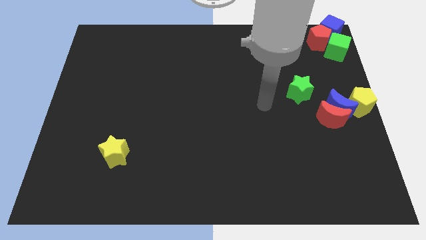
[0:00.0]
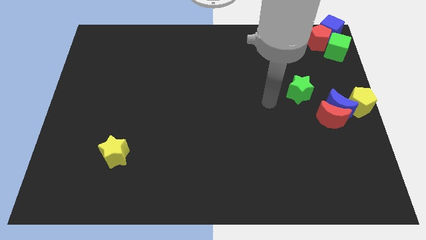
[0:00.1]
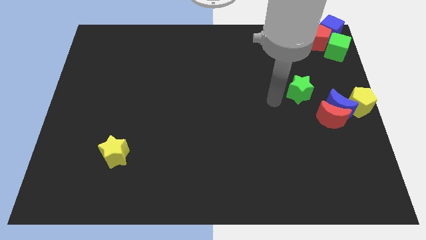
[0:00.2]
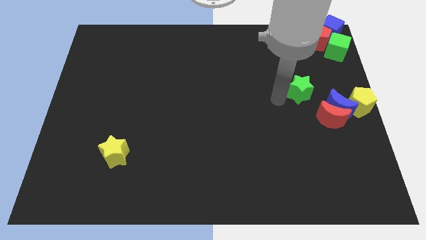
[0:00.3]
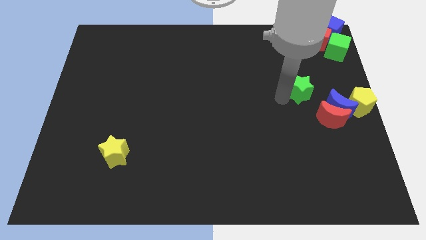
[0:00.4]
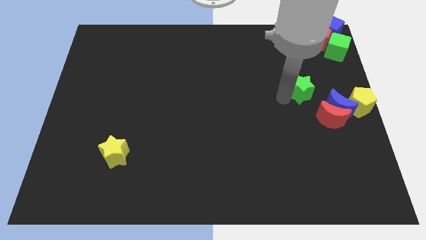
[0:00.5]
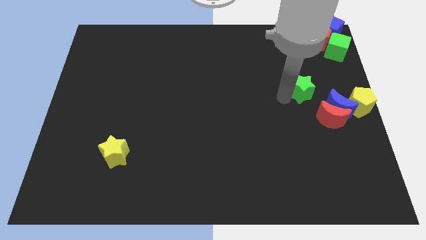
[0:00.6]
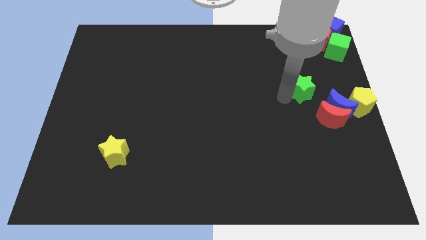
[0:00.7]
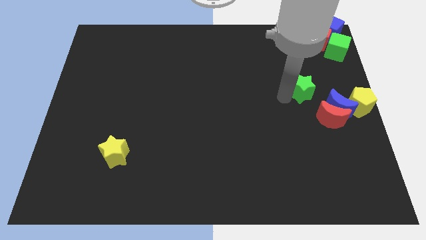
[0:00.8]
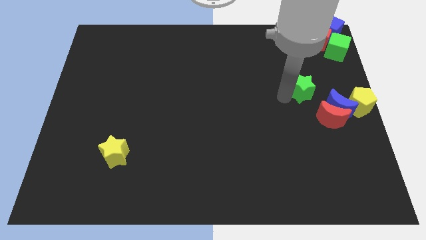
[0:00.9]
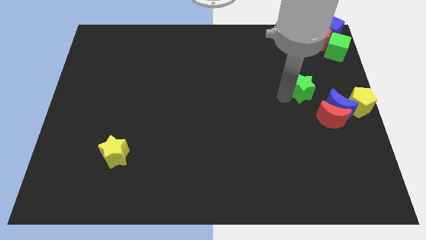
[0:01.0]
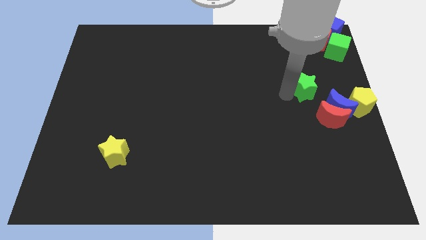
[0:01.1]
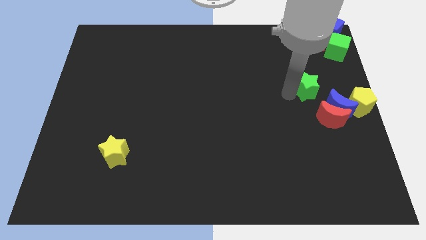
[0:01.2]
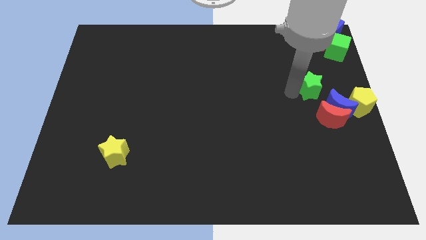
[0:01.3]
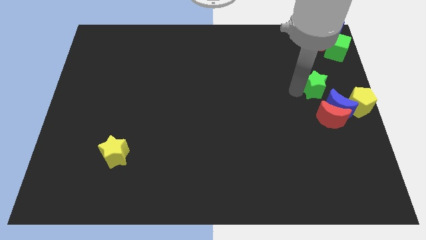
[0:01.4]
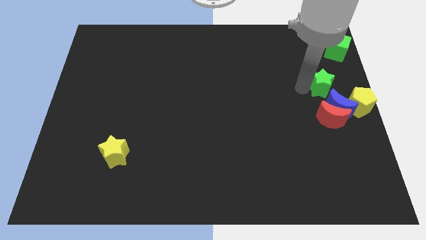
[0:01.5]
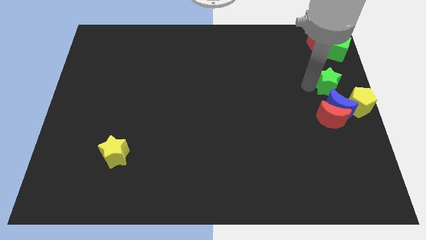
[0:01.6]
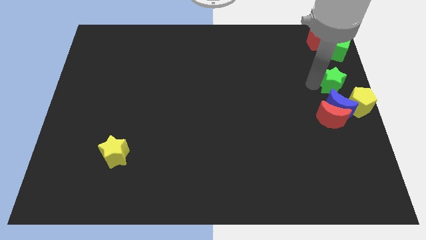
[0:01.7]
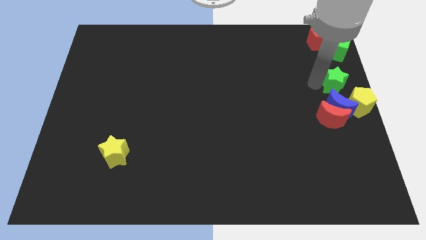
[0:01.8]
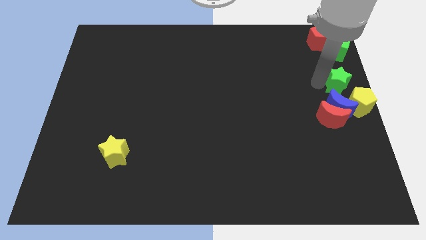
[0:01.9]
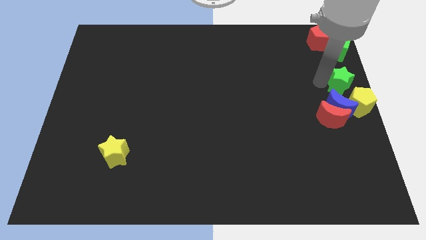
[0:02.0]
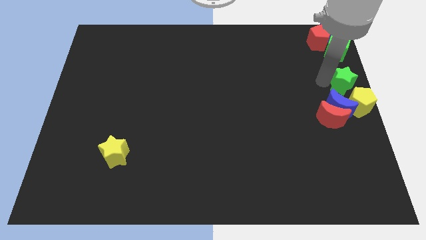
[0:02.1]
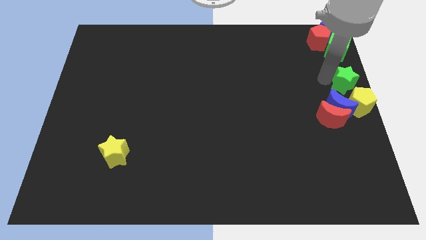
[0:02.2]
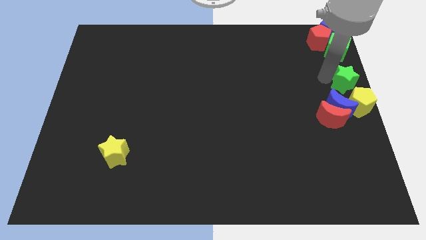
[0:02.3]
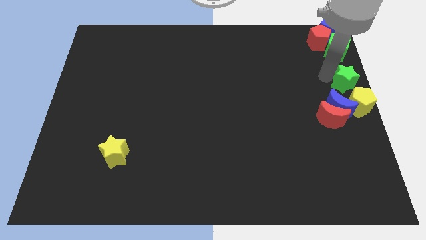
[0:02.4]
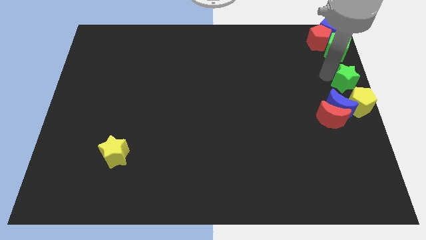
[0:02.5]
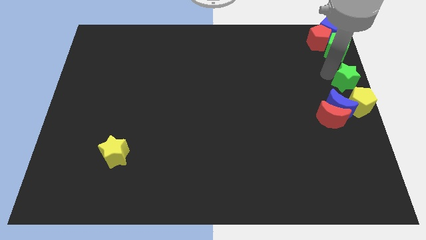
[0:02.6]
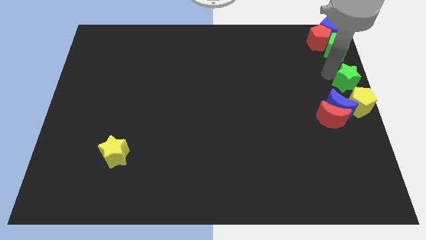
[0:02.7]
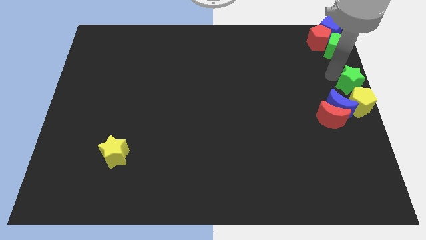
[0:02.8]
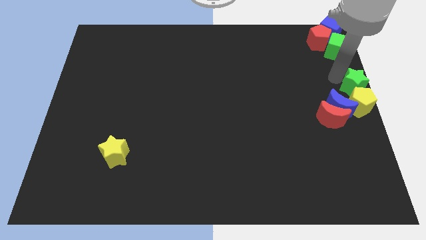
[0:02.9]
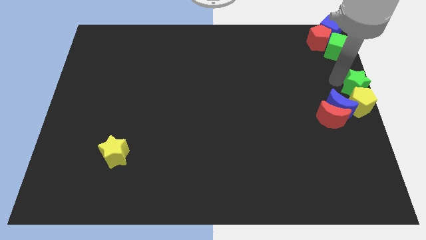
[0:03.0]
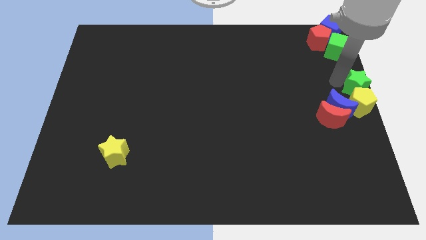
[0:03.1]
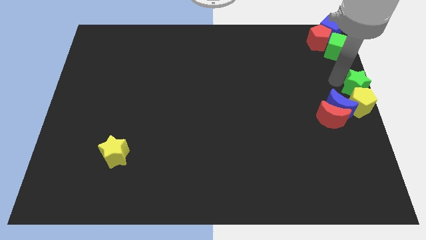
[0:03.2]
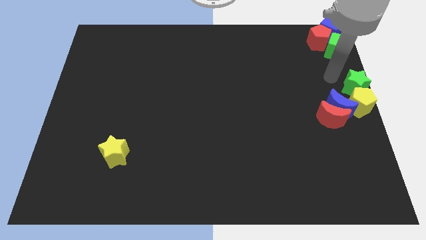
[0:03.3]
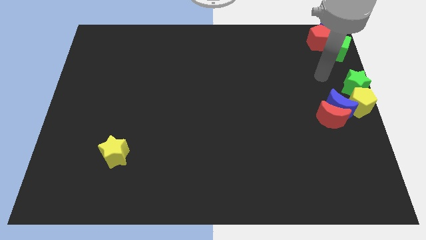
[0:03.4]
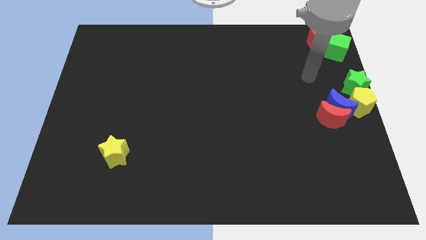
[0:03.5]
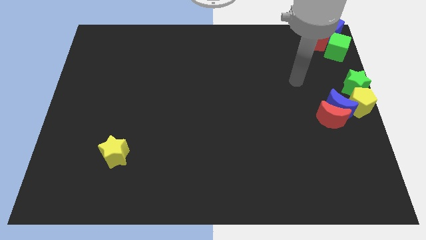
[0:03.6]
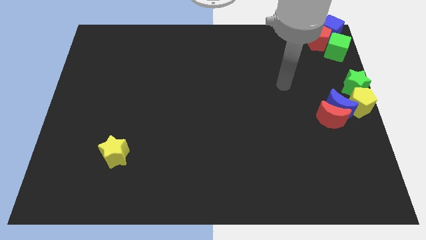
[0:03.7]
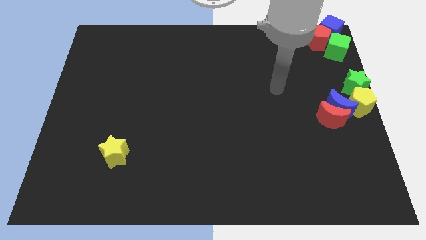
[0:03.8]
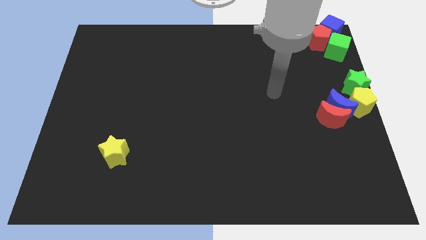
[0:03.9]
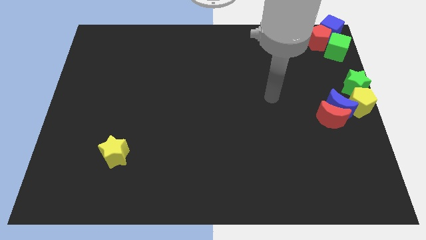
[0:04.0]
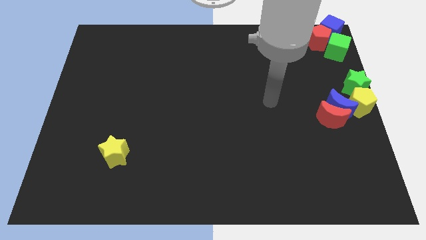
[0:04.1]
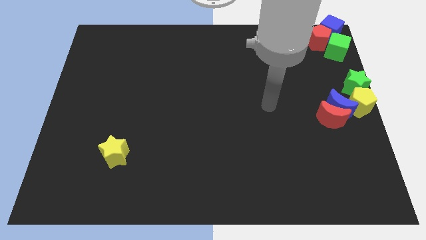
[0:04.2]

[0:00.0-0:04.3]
move green star above yellow pentagon

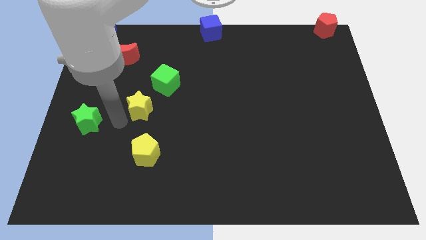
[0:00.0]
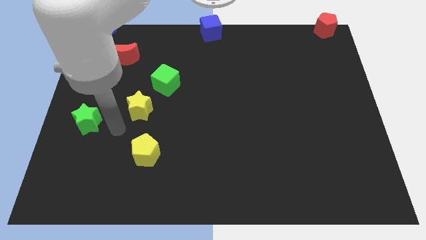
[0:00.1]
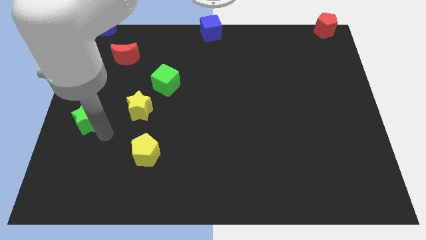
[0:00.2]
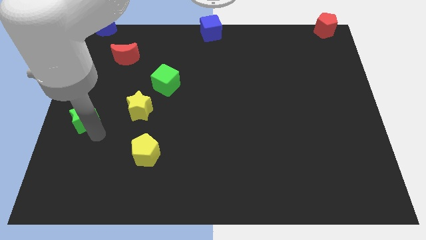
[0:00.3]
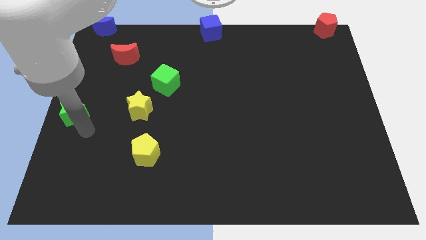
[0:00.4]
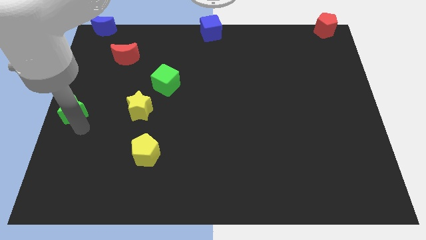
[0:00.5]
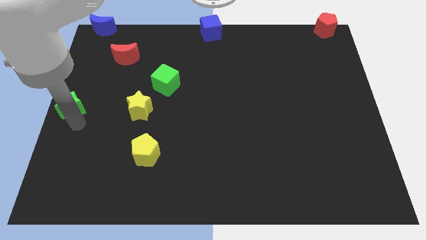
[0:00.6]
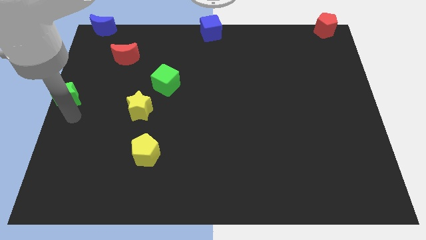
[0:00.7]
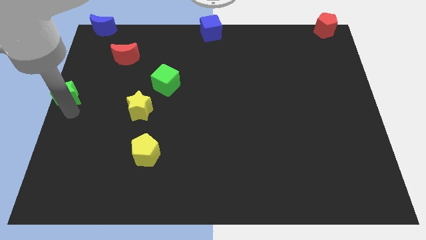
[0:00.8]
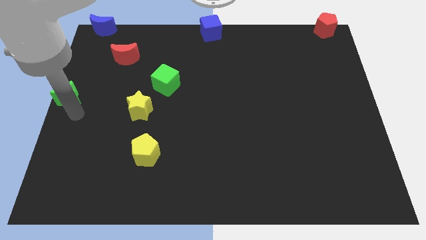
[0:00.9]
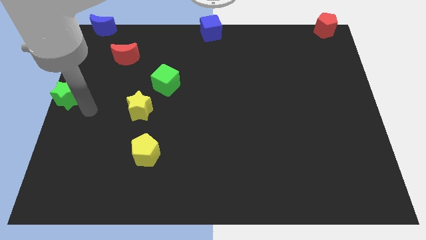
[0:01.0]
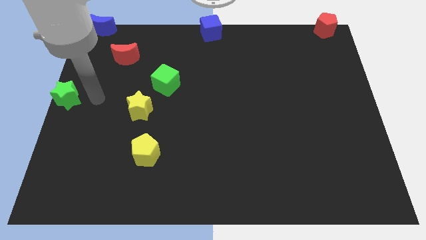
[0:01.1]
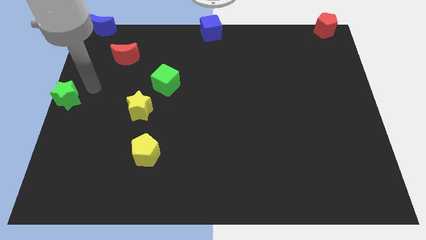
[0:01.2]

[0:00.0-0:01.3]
move the green star to the center left side

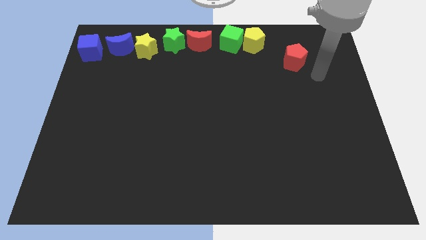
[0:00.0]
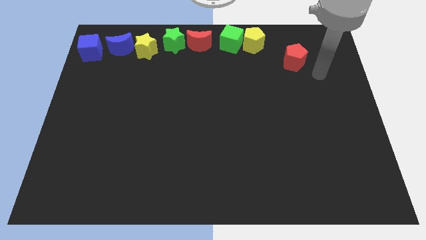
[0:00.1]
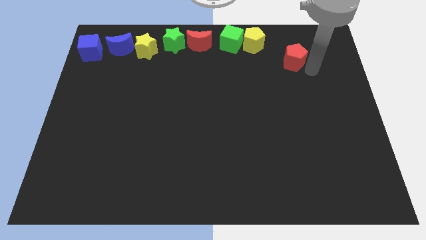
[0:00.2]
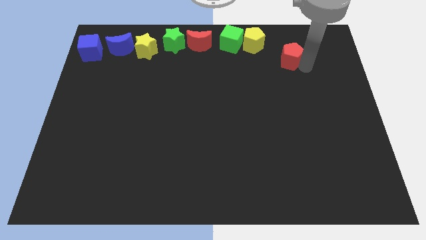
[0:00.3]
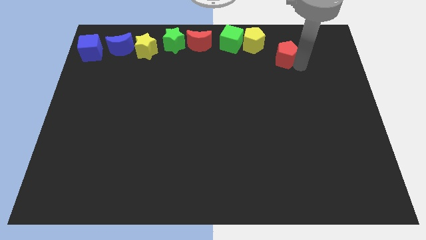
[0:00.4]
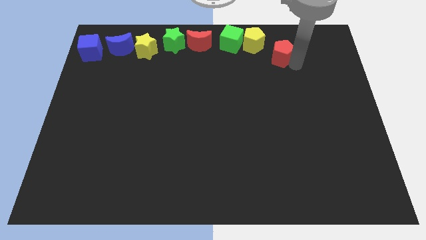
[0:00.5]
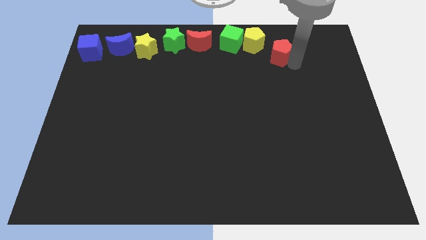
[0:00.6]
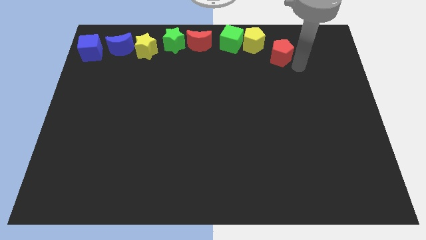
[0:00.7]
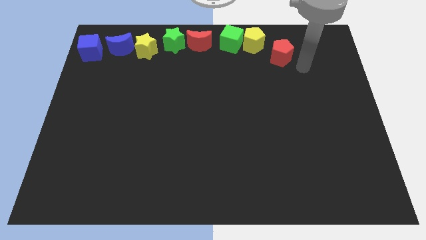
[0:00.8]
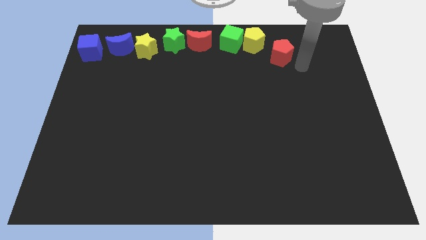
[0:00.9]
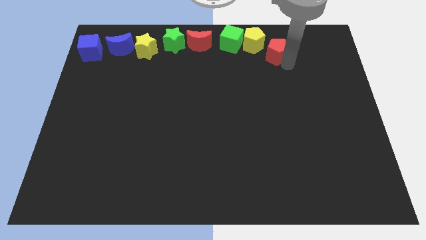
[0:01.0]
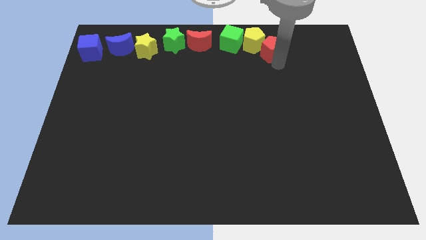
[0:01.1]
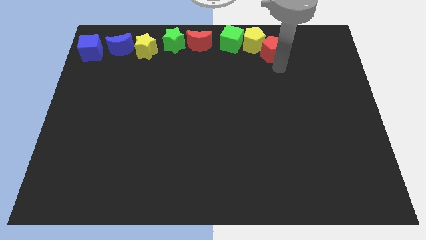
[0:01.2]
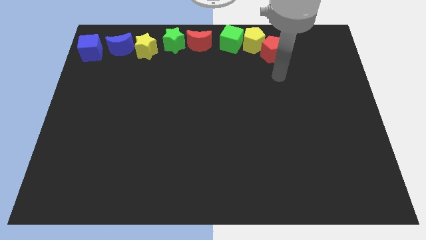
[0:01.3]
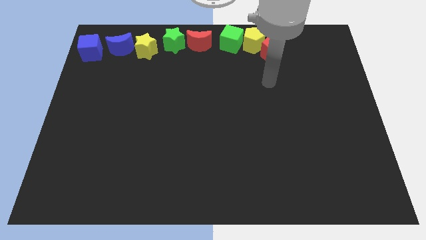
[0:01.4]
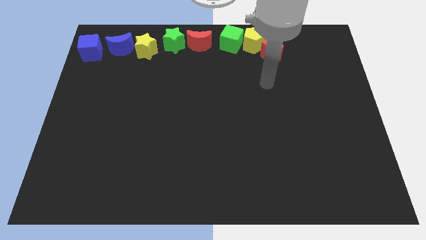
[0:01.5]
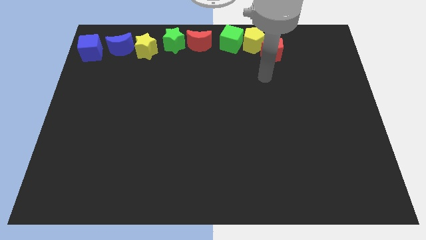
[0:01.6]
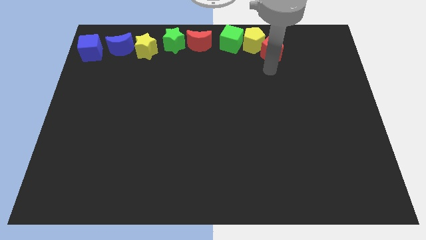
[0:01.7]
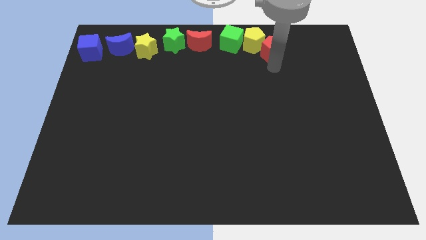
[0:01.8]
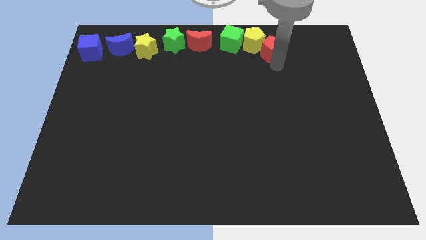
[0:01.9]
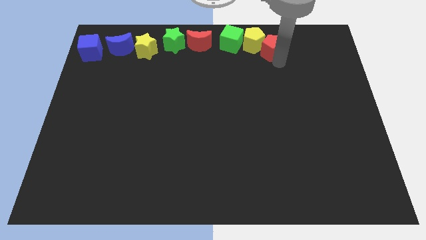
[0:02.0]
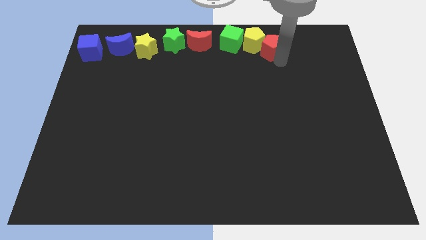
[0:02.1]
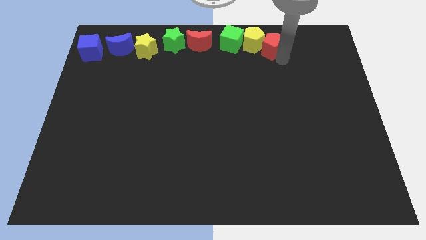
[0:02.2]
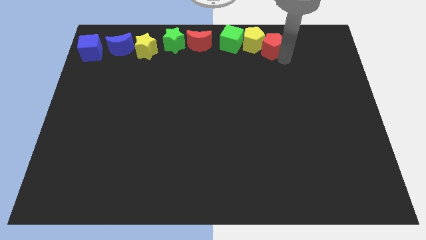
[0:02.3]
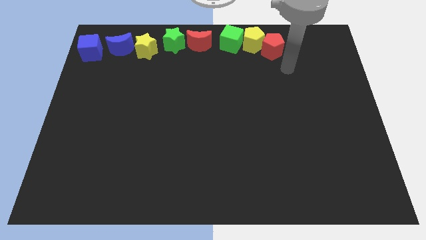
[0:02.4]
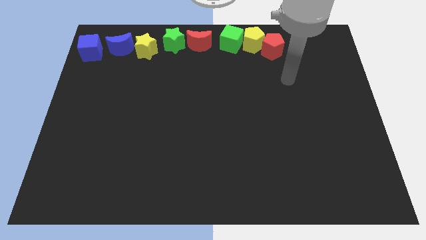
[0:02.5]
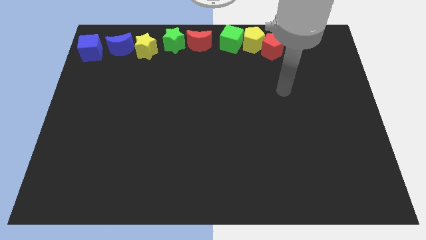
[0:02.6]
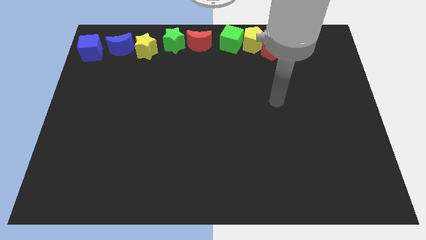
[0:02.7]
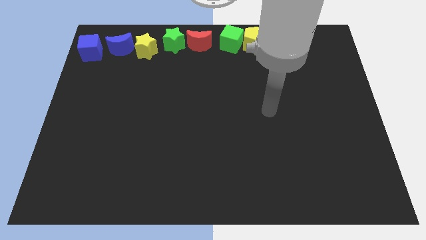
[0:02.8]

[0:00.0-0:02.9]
push the red pentagon into the yellow pentagon

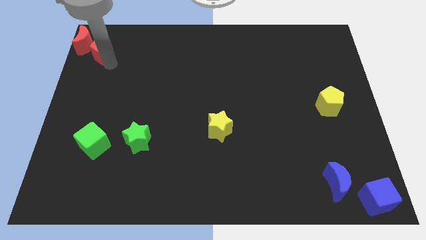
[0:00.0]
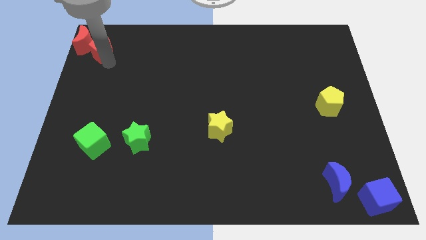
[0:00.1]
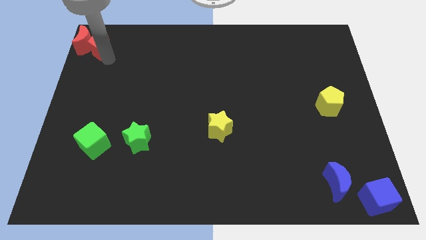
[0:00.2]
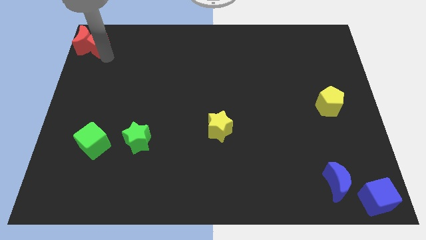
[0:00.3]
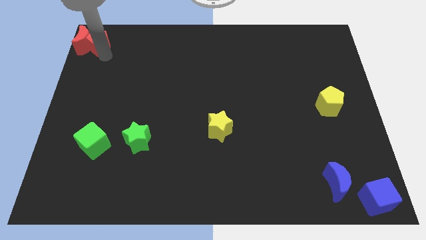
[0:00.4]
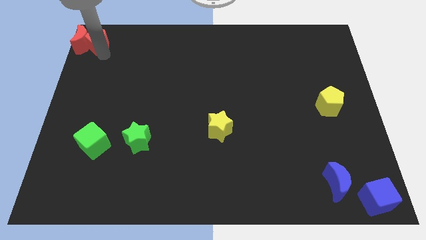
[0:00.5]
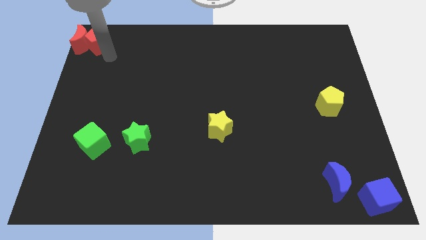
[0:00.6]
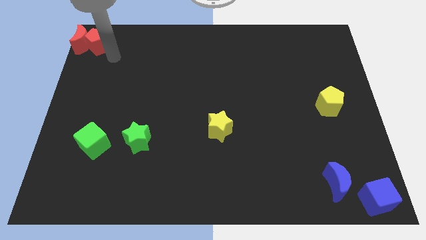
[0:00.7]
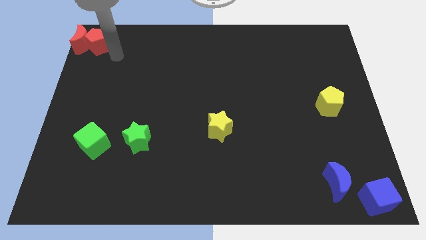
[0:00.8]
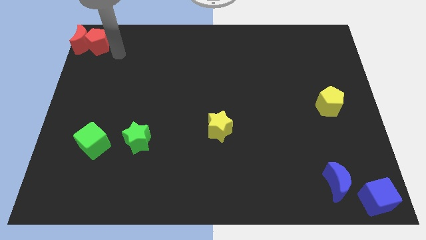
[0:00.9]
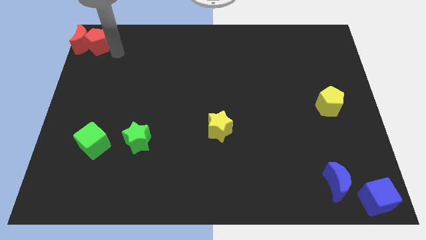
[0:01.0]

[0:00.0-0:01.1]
push the red pentagon into red moon
